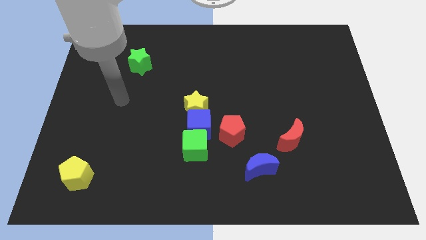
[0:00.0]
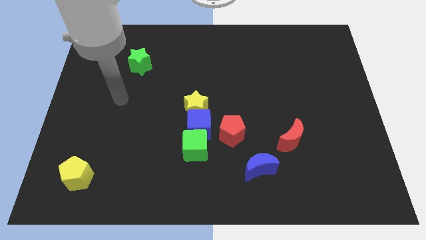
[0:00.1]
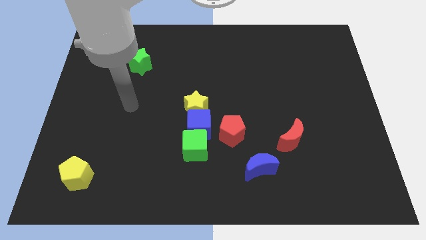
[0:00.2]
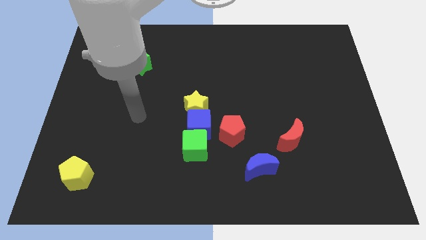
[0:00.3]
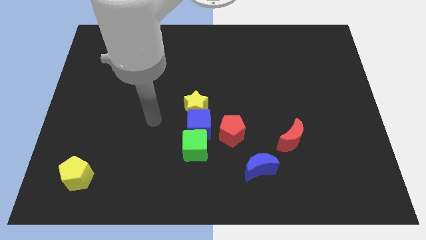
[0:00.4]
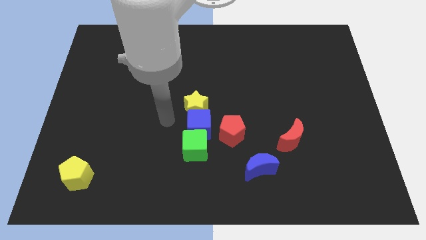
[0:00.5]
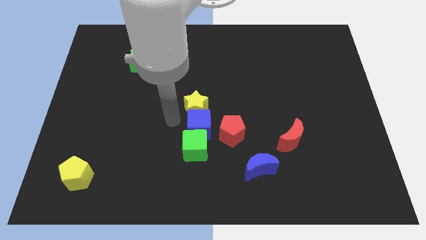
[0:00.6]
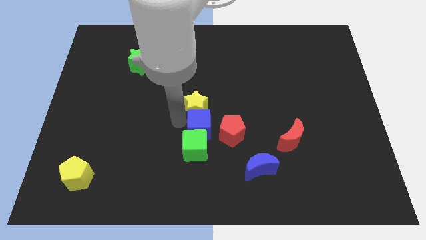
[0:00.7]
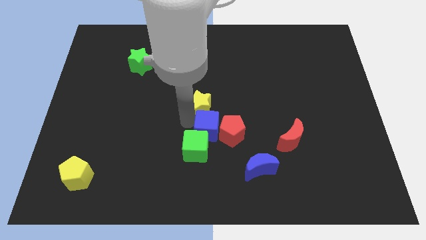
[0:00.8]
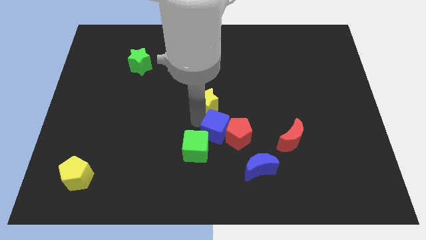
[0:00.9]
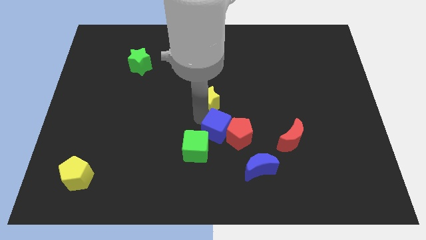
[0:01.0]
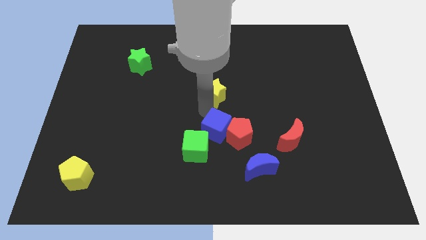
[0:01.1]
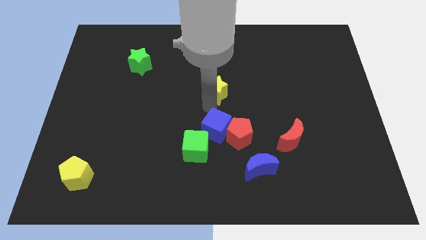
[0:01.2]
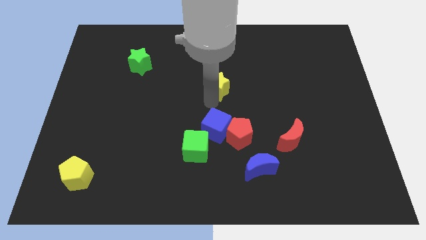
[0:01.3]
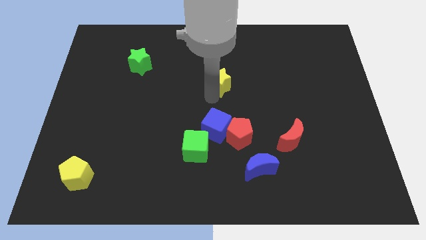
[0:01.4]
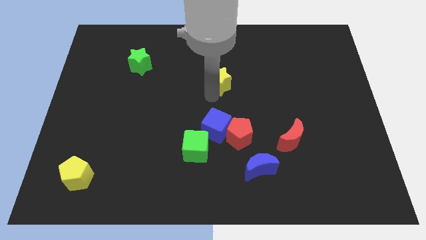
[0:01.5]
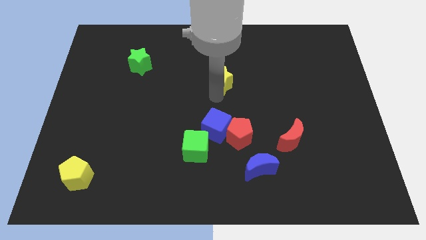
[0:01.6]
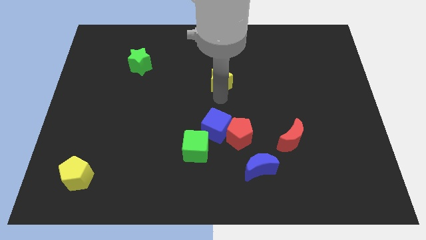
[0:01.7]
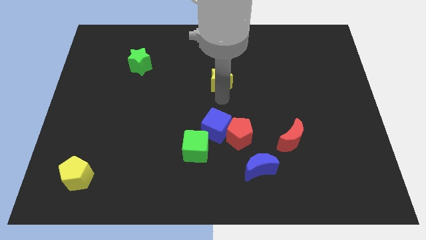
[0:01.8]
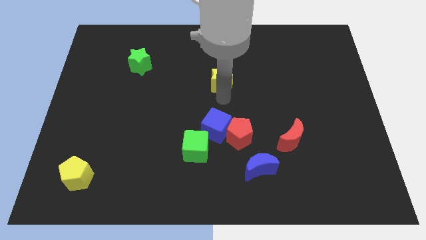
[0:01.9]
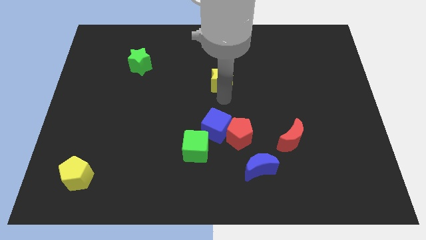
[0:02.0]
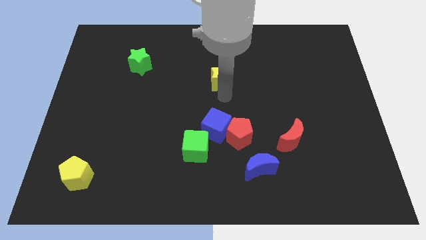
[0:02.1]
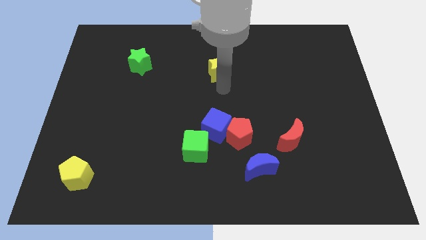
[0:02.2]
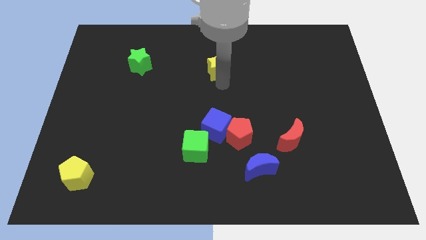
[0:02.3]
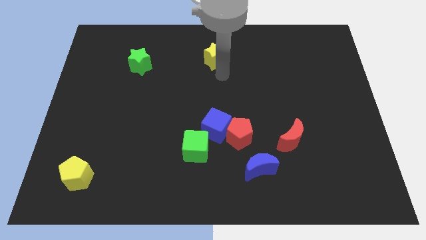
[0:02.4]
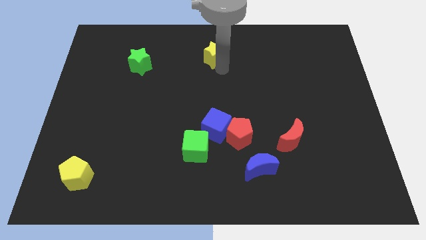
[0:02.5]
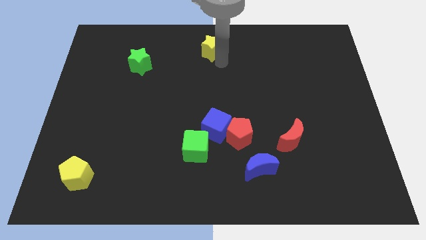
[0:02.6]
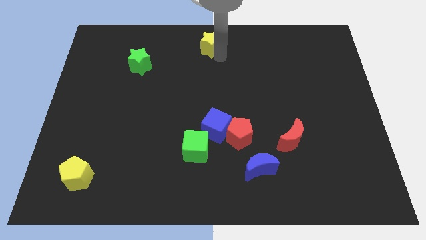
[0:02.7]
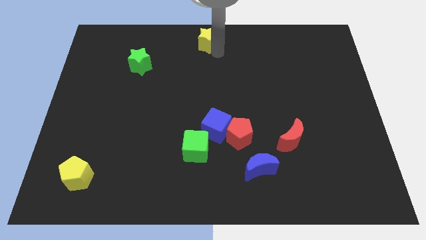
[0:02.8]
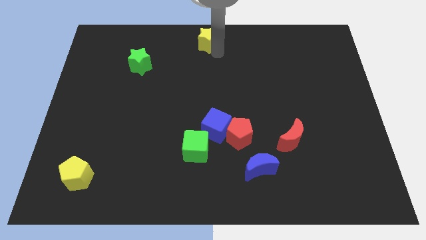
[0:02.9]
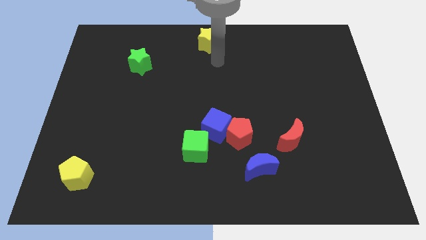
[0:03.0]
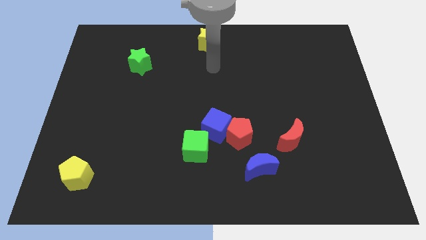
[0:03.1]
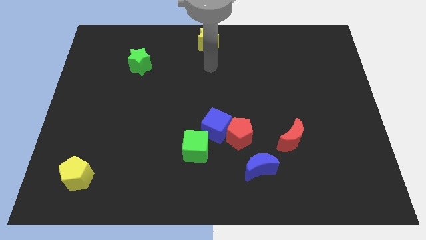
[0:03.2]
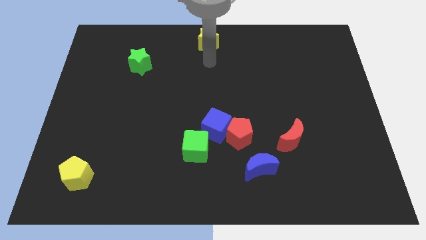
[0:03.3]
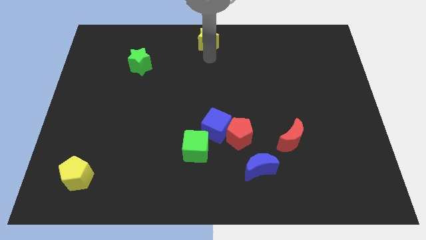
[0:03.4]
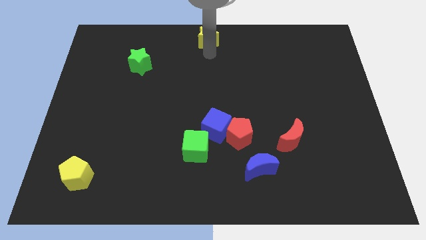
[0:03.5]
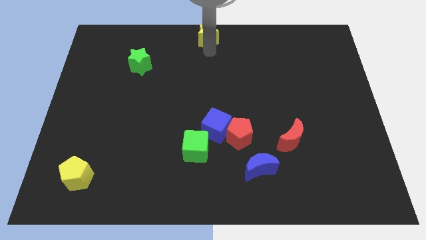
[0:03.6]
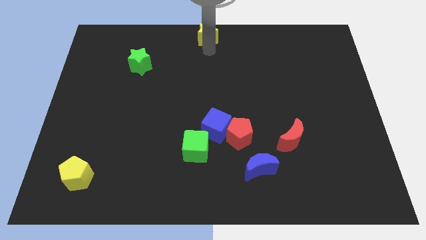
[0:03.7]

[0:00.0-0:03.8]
move the yellow star to the top center of the board

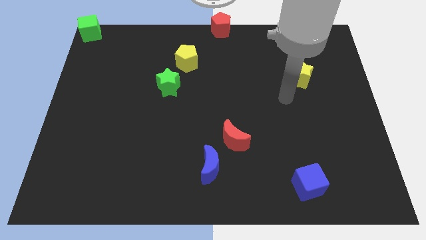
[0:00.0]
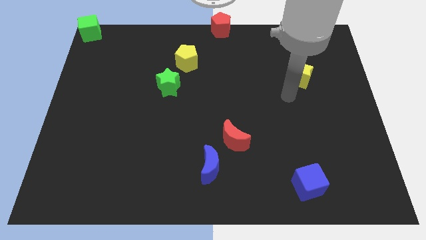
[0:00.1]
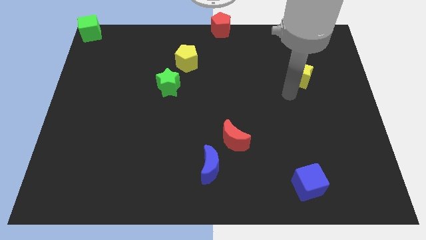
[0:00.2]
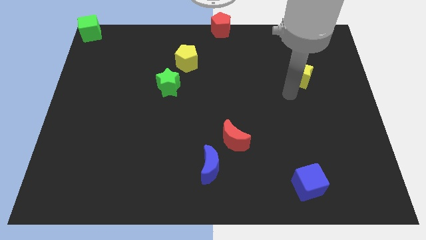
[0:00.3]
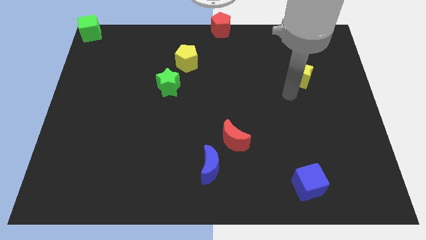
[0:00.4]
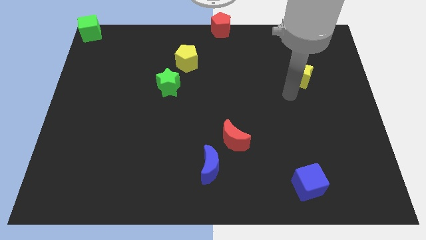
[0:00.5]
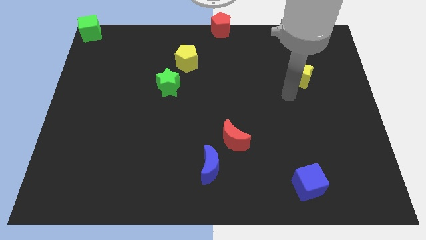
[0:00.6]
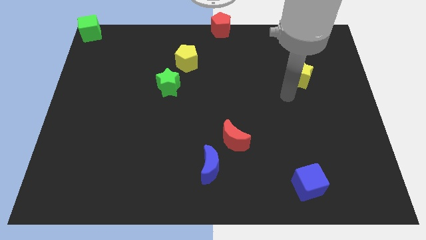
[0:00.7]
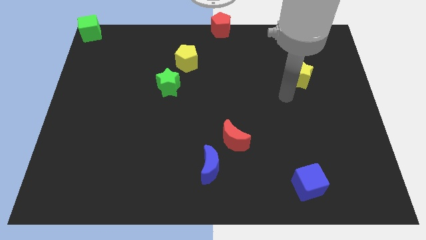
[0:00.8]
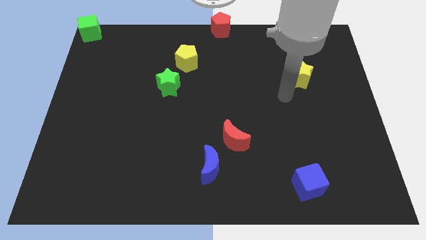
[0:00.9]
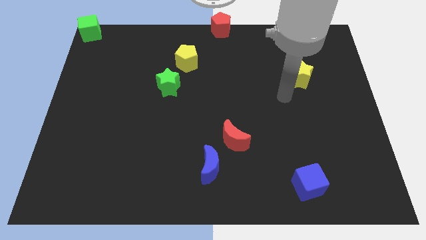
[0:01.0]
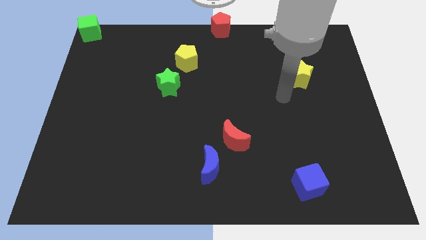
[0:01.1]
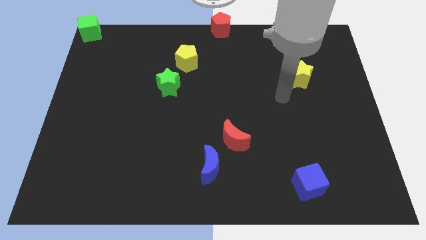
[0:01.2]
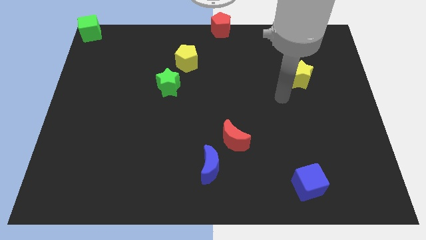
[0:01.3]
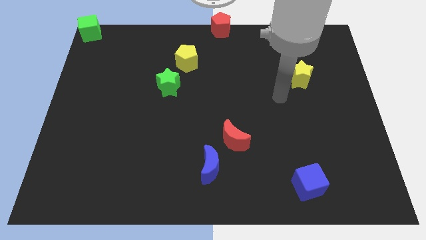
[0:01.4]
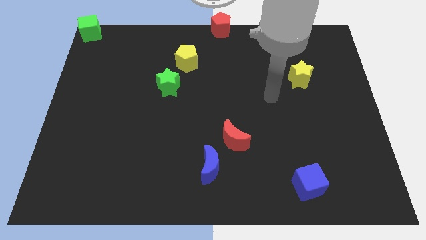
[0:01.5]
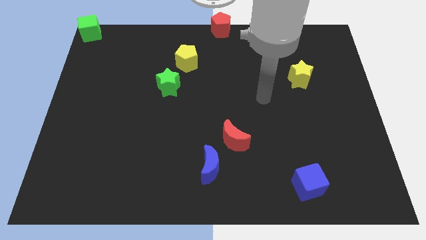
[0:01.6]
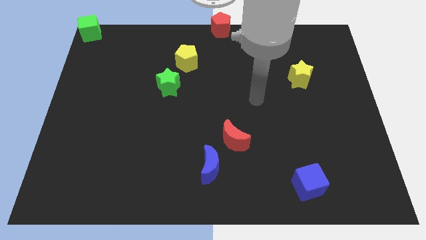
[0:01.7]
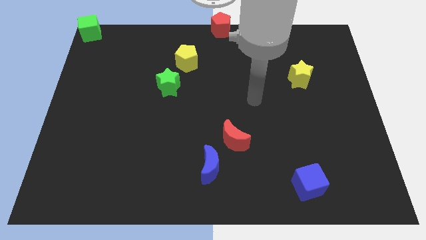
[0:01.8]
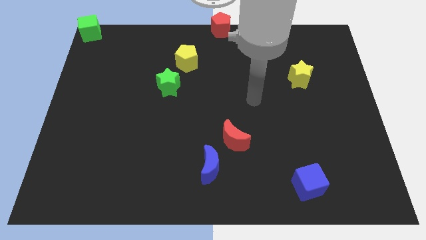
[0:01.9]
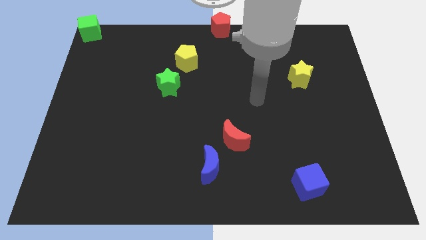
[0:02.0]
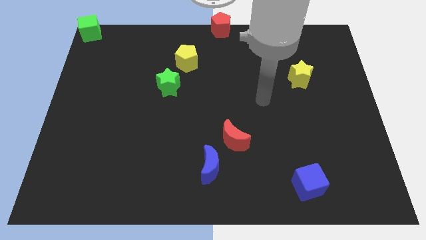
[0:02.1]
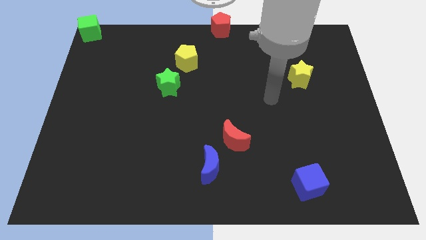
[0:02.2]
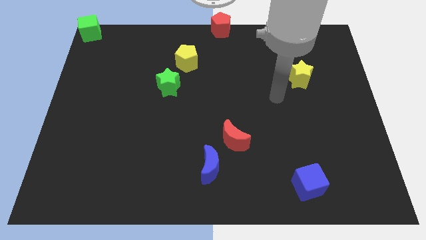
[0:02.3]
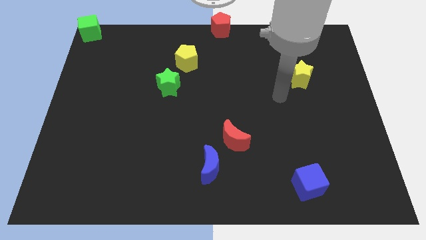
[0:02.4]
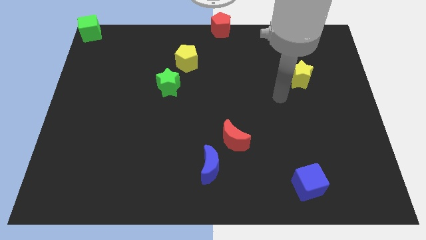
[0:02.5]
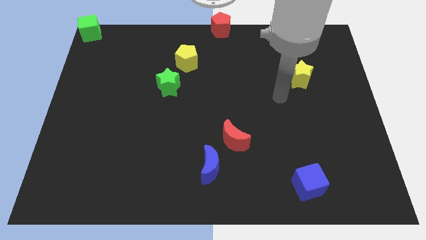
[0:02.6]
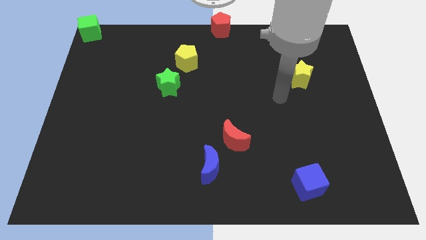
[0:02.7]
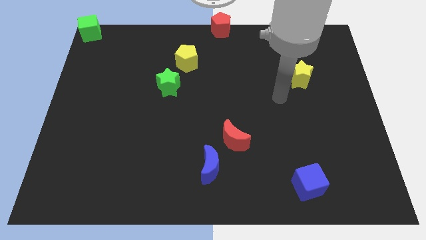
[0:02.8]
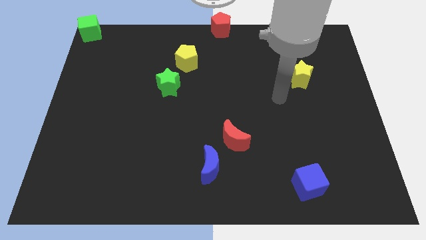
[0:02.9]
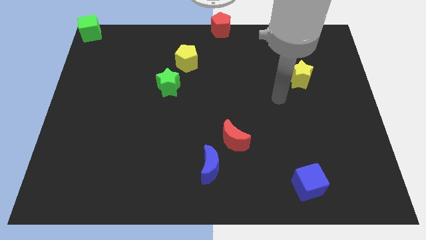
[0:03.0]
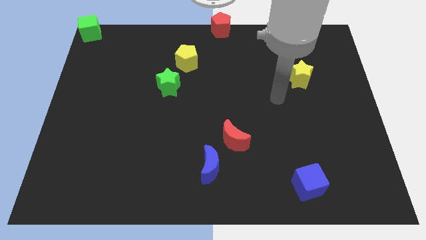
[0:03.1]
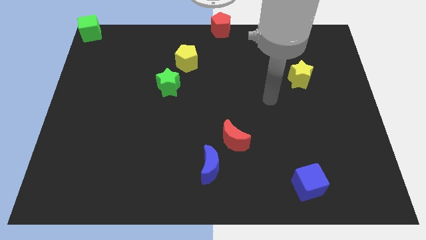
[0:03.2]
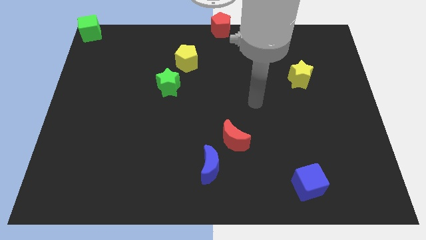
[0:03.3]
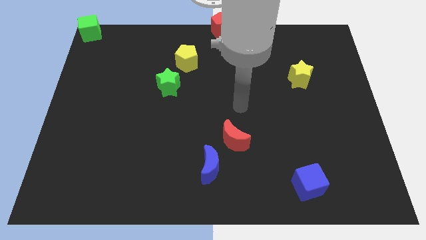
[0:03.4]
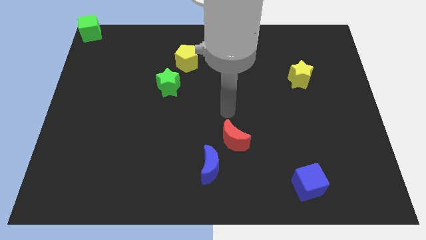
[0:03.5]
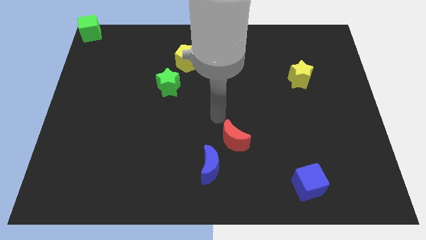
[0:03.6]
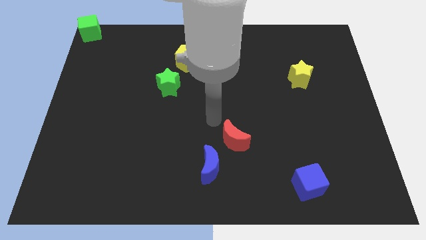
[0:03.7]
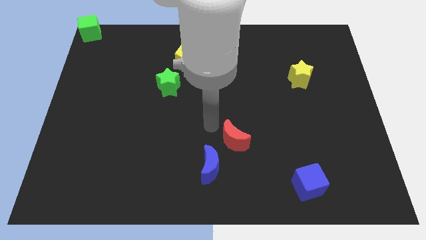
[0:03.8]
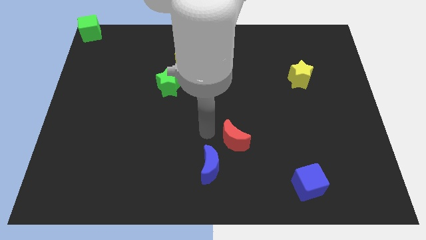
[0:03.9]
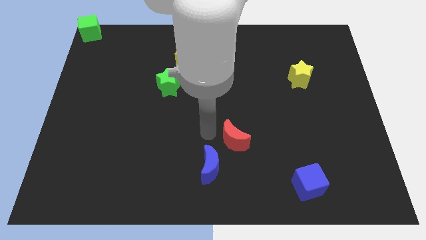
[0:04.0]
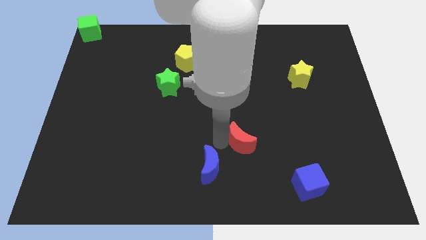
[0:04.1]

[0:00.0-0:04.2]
move your arm close to red crescent

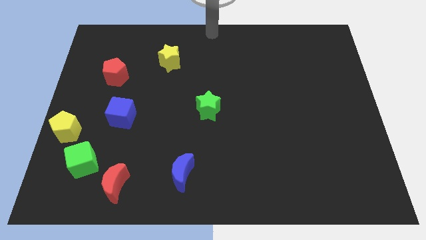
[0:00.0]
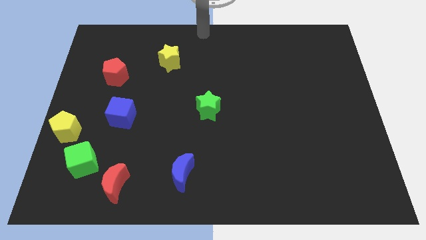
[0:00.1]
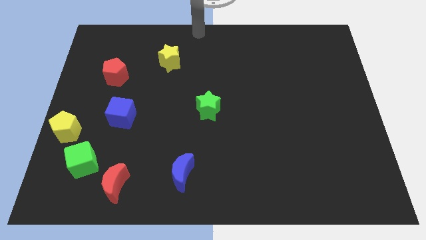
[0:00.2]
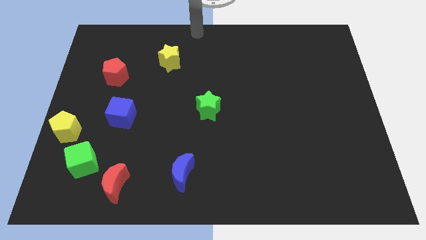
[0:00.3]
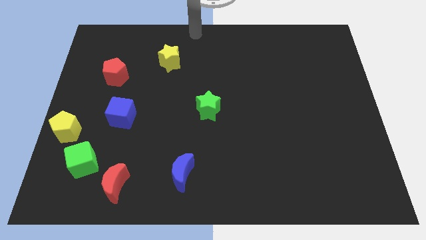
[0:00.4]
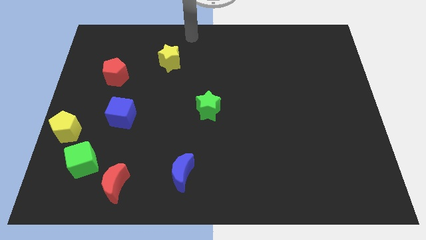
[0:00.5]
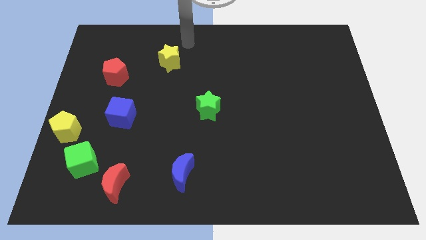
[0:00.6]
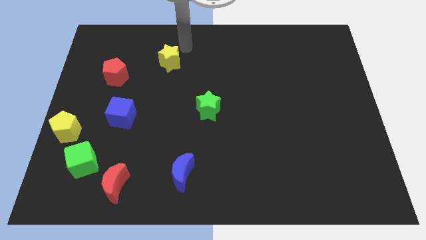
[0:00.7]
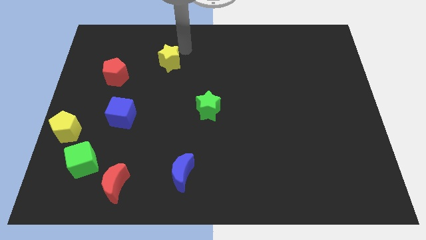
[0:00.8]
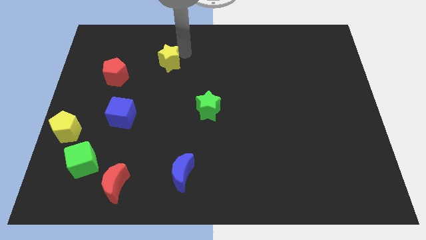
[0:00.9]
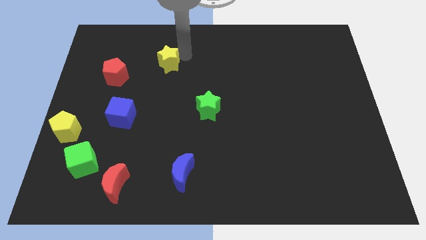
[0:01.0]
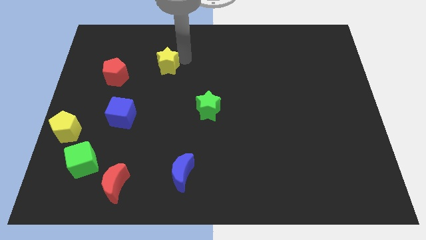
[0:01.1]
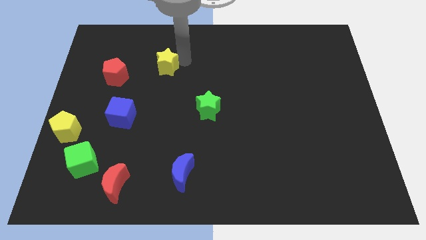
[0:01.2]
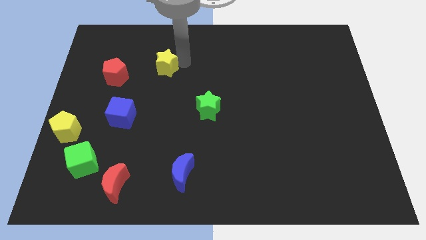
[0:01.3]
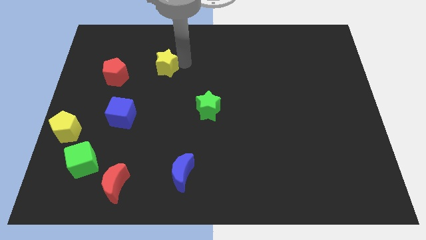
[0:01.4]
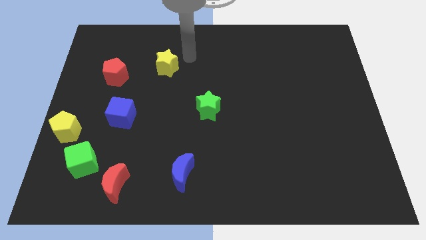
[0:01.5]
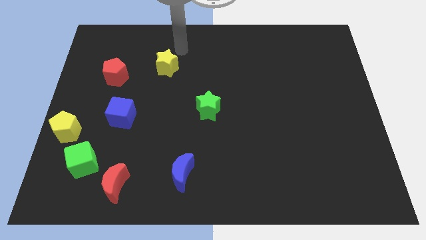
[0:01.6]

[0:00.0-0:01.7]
push the yellow star slightly to the bottom
